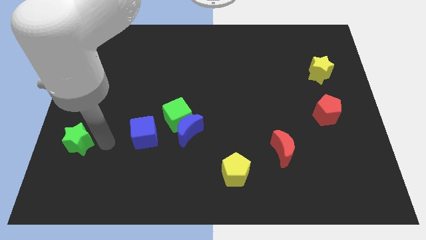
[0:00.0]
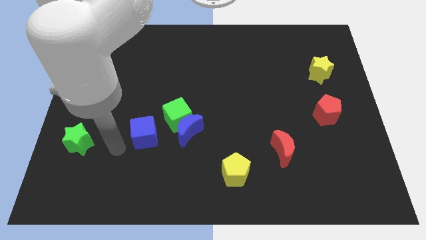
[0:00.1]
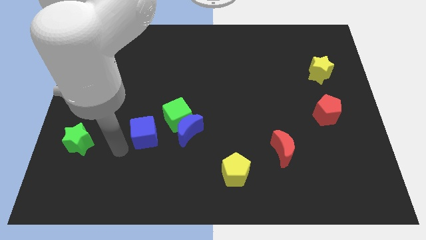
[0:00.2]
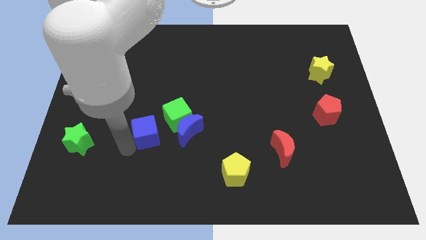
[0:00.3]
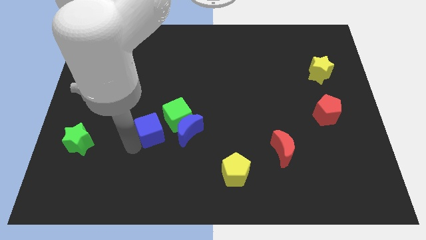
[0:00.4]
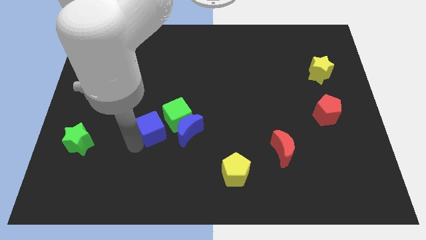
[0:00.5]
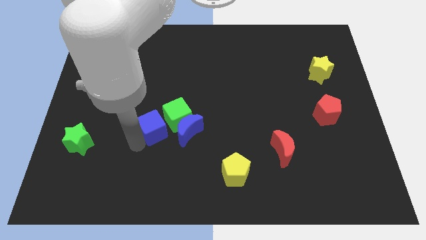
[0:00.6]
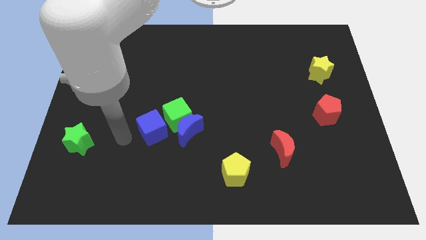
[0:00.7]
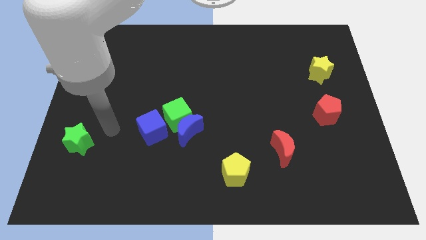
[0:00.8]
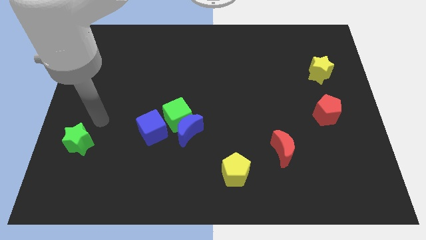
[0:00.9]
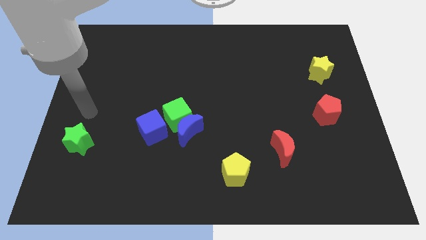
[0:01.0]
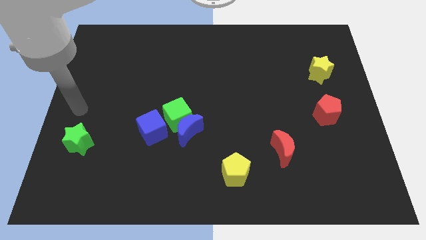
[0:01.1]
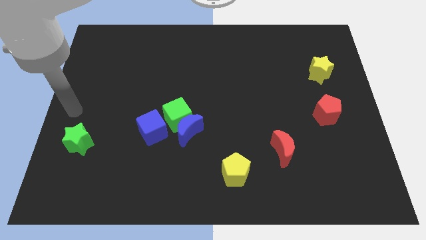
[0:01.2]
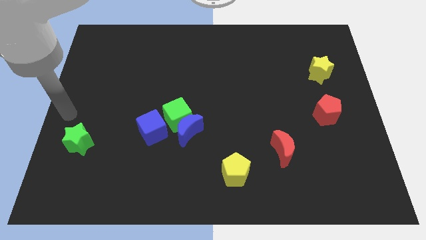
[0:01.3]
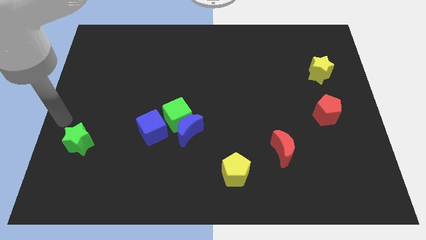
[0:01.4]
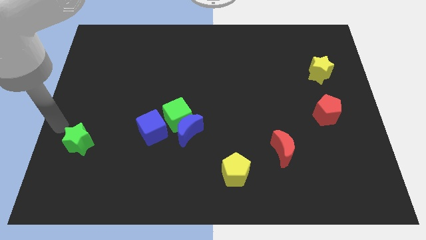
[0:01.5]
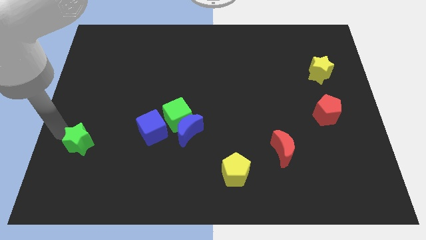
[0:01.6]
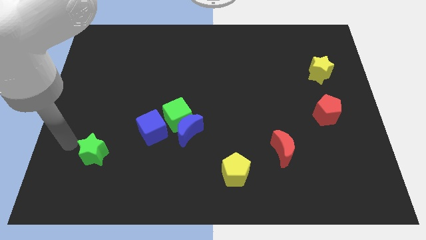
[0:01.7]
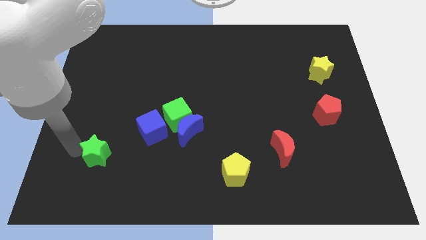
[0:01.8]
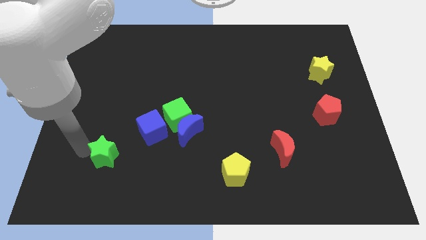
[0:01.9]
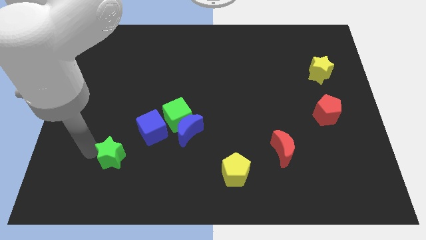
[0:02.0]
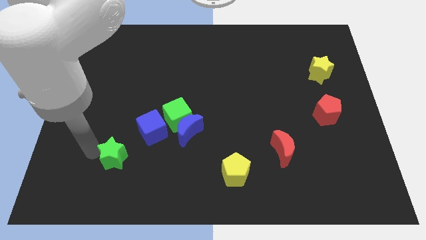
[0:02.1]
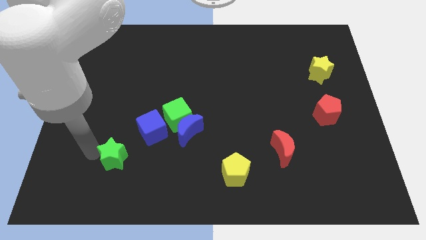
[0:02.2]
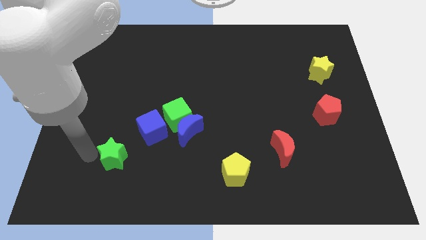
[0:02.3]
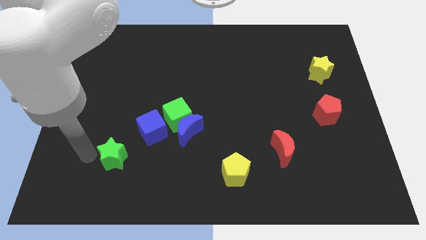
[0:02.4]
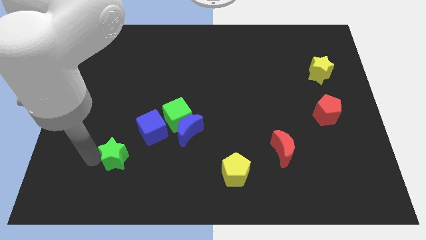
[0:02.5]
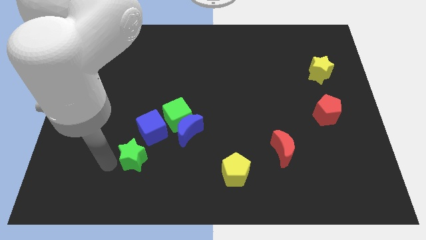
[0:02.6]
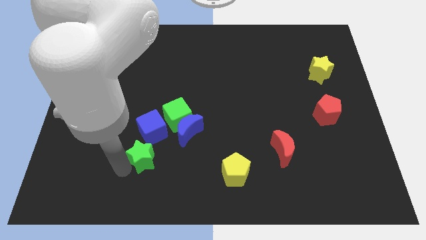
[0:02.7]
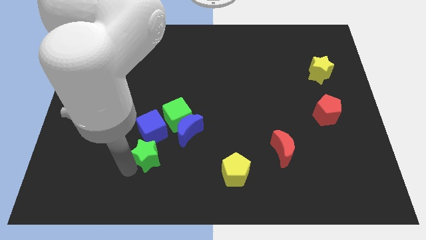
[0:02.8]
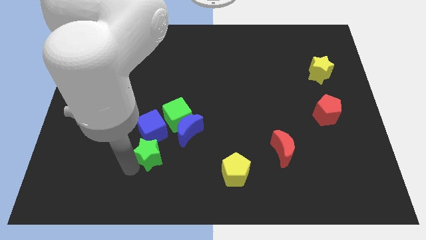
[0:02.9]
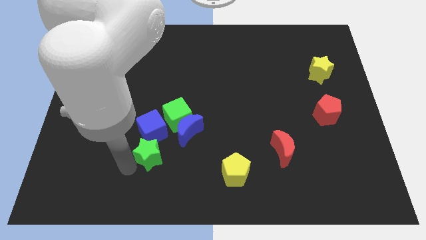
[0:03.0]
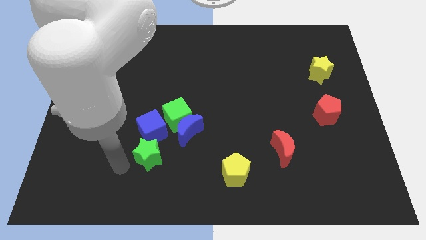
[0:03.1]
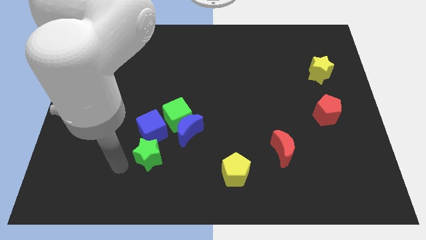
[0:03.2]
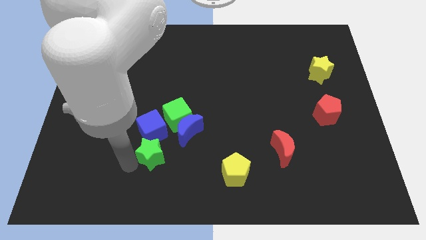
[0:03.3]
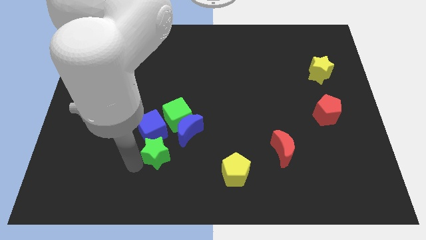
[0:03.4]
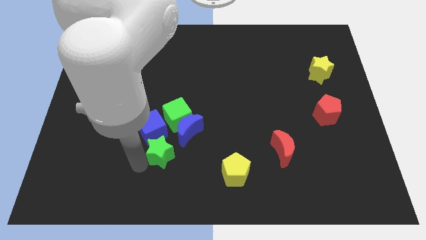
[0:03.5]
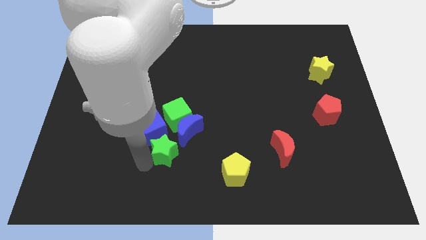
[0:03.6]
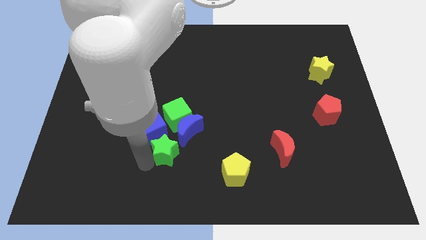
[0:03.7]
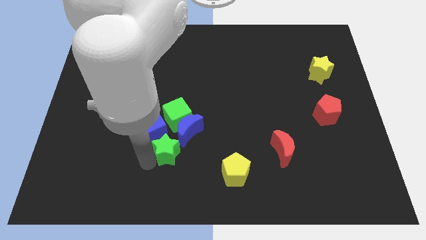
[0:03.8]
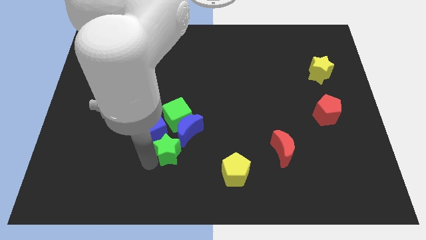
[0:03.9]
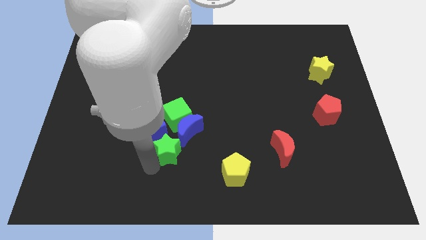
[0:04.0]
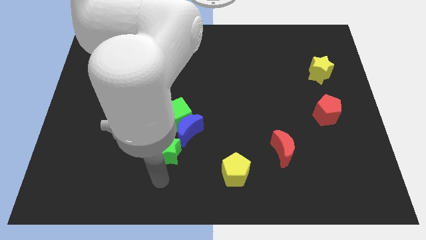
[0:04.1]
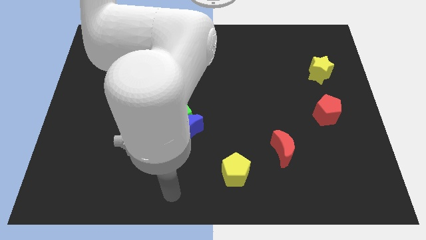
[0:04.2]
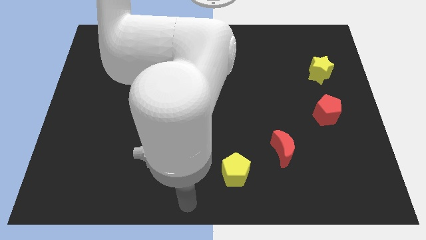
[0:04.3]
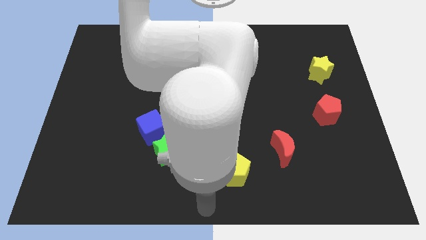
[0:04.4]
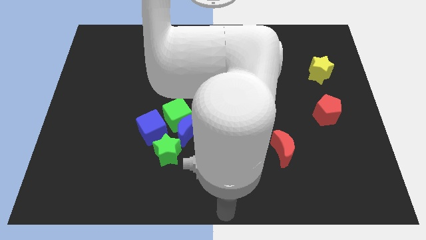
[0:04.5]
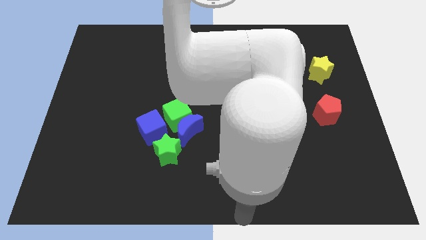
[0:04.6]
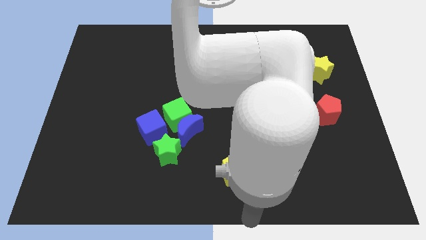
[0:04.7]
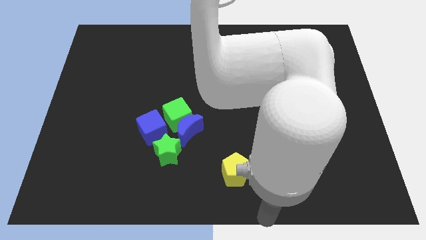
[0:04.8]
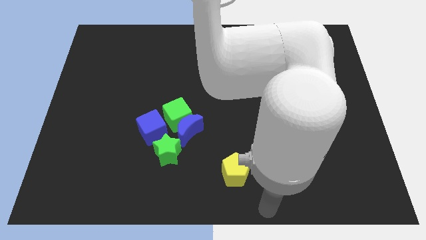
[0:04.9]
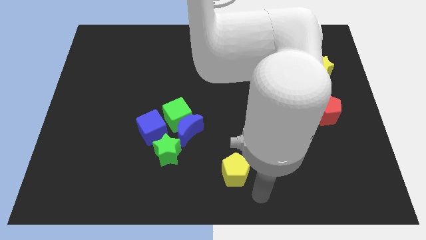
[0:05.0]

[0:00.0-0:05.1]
slide green star below green cube

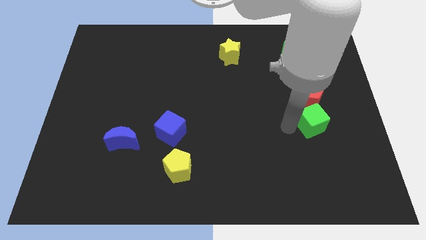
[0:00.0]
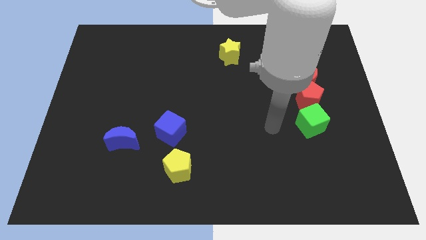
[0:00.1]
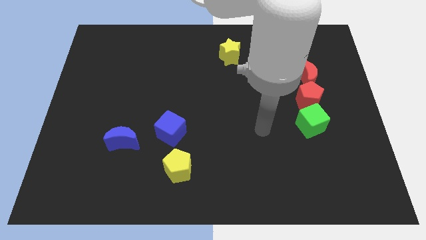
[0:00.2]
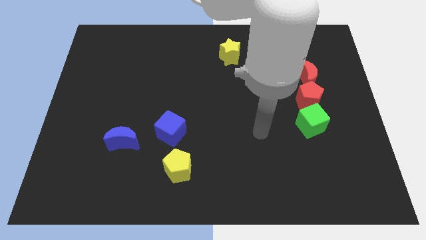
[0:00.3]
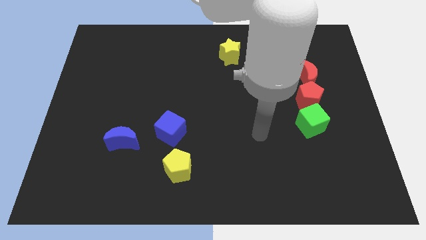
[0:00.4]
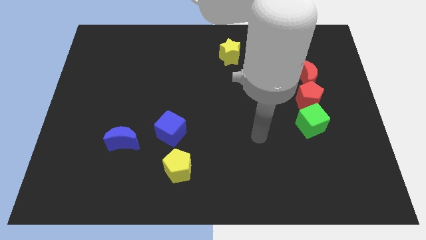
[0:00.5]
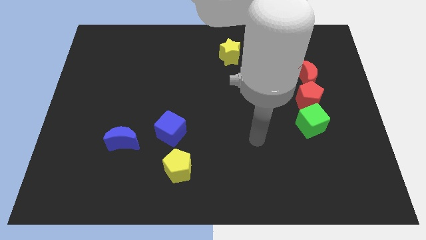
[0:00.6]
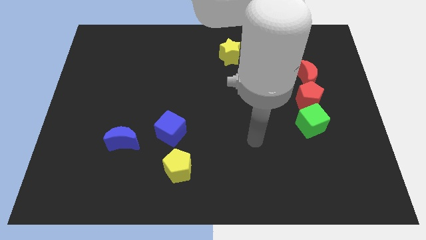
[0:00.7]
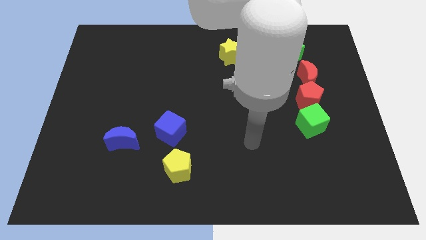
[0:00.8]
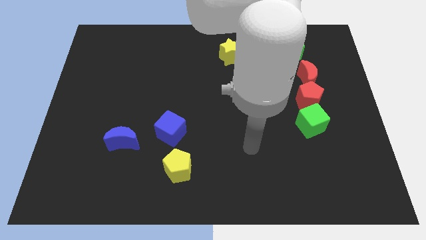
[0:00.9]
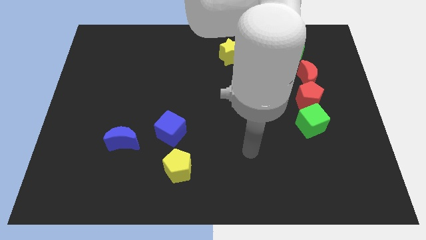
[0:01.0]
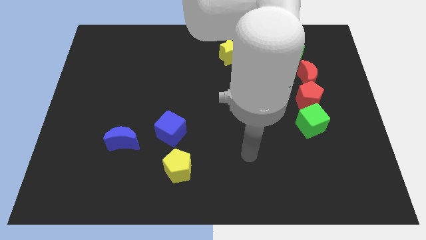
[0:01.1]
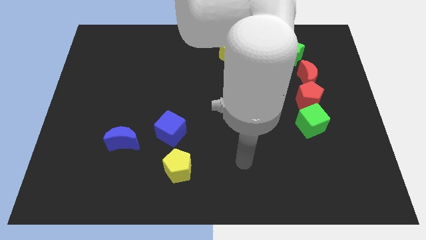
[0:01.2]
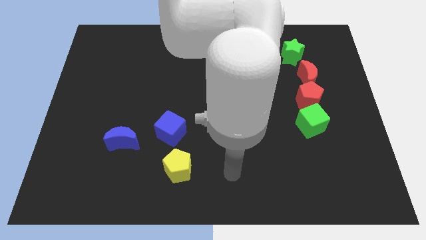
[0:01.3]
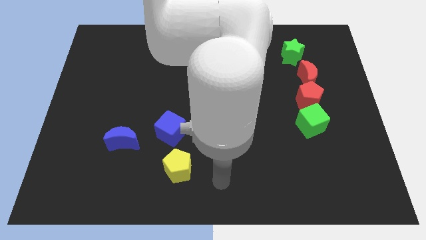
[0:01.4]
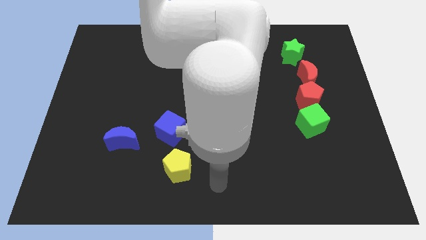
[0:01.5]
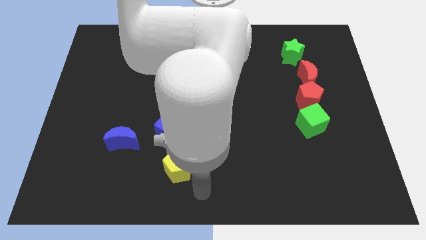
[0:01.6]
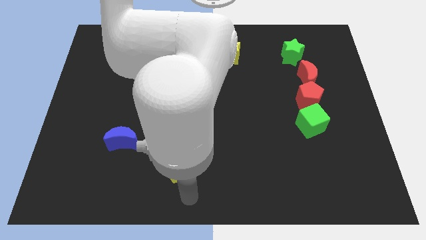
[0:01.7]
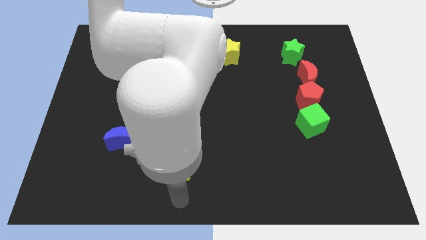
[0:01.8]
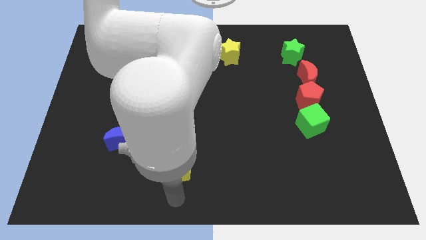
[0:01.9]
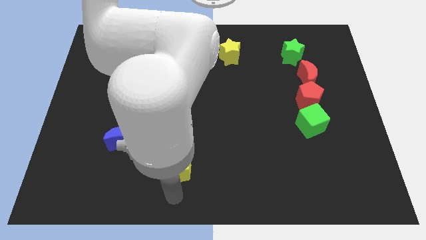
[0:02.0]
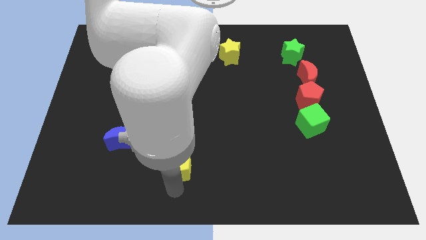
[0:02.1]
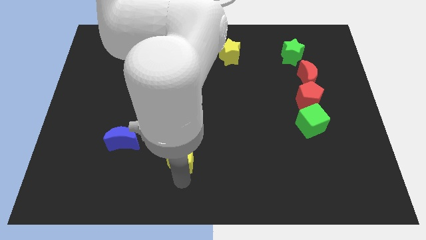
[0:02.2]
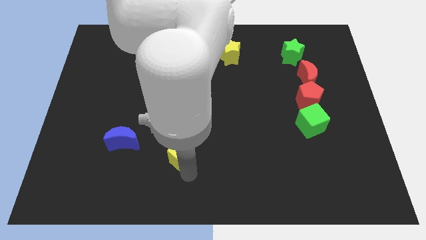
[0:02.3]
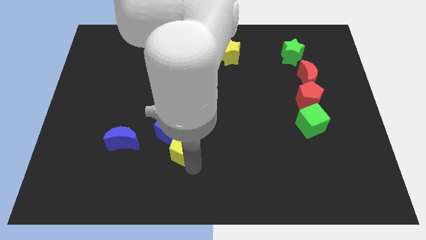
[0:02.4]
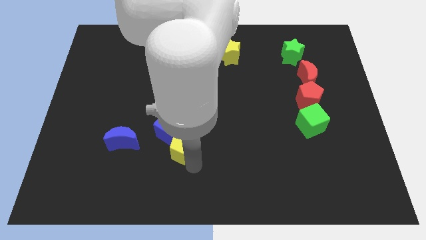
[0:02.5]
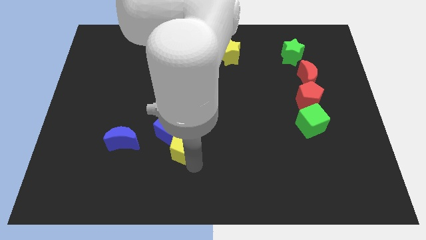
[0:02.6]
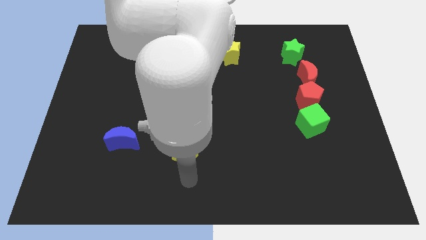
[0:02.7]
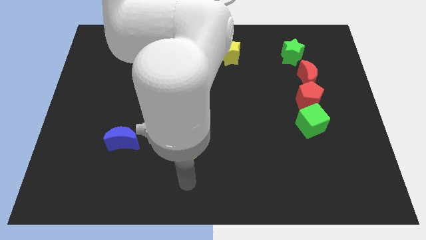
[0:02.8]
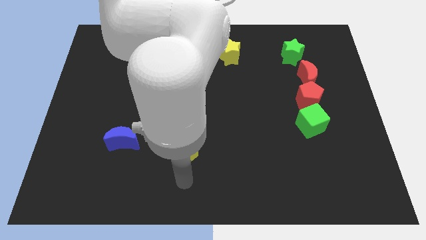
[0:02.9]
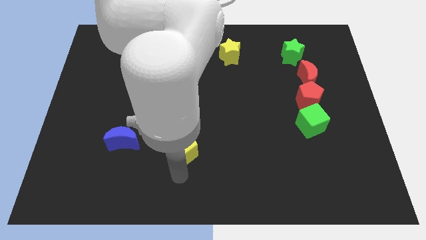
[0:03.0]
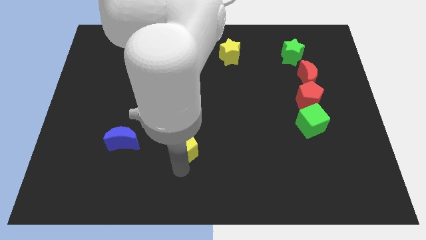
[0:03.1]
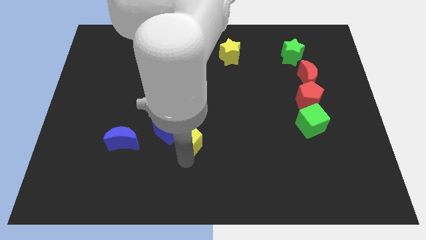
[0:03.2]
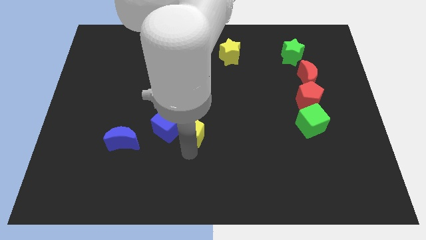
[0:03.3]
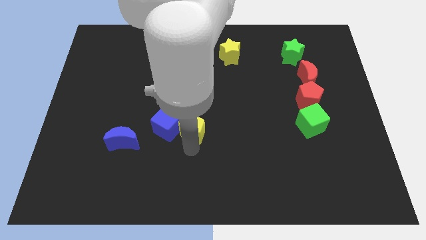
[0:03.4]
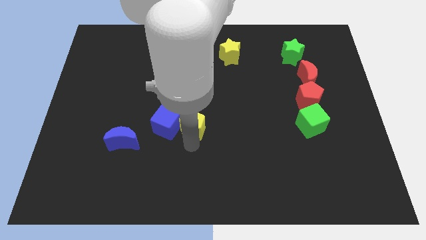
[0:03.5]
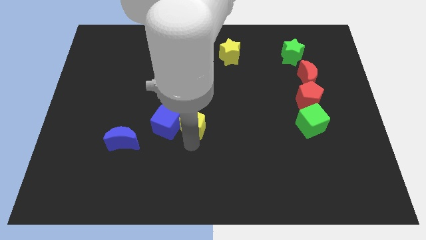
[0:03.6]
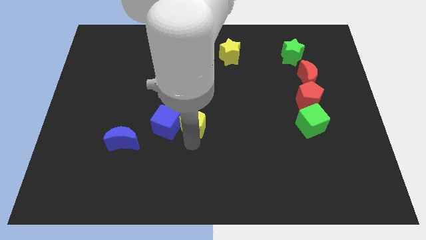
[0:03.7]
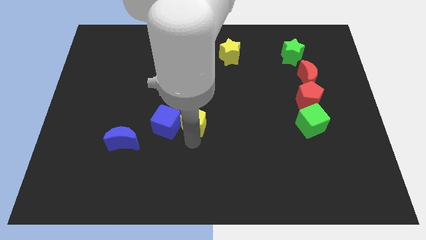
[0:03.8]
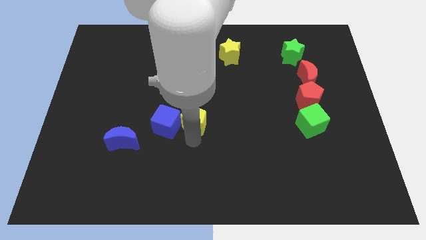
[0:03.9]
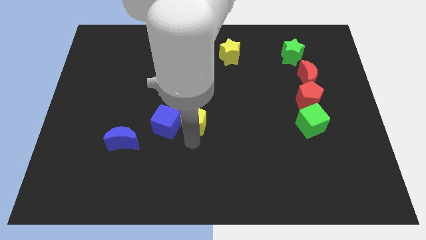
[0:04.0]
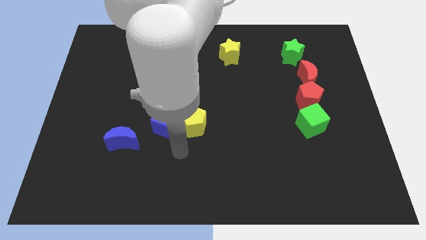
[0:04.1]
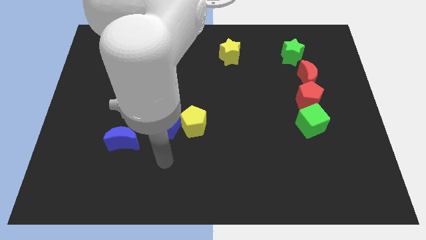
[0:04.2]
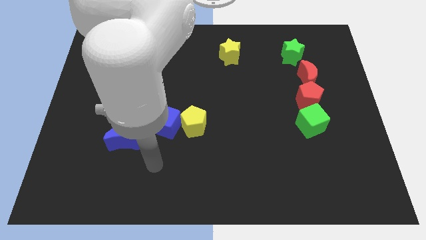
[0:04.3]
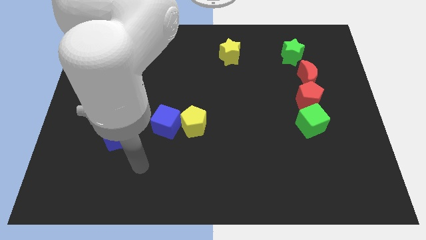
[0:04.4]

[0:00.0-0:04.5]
place the yellow pentagon right to the blue cube
